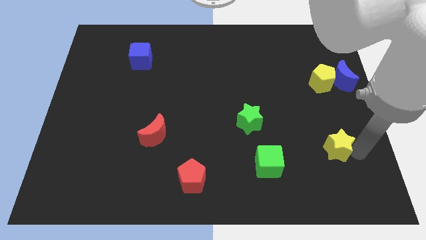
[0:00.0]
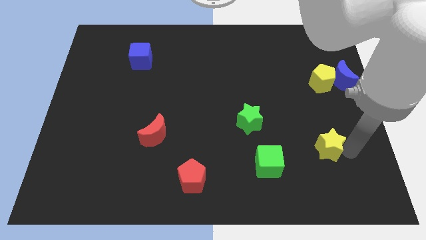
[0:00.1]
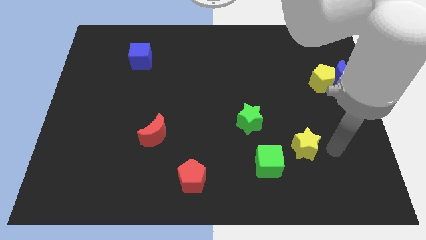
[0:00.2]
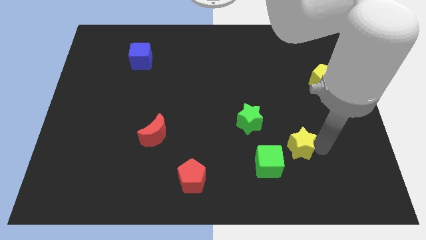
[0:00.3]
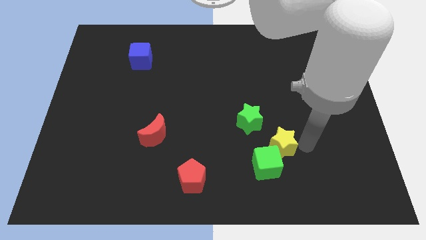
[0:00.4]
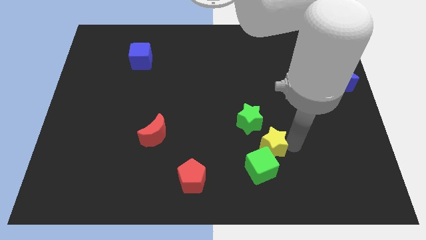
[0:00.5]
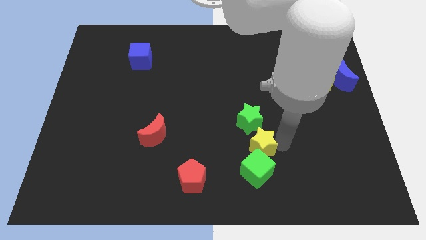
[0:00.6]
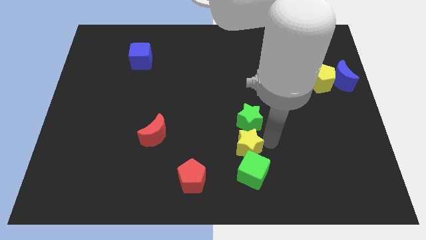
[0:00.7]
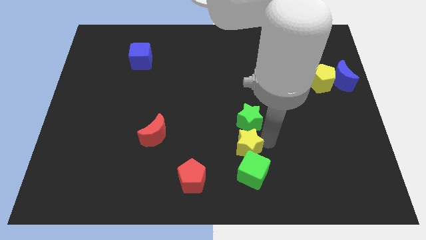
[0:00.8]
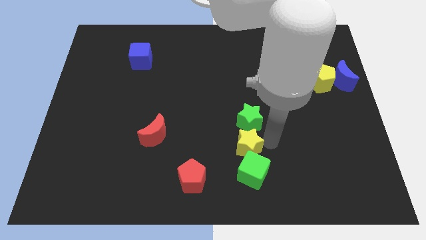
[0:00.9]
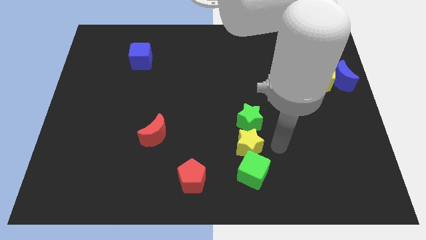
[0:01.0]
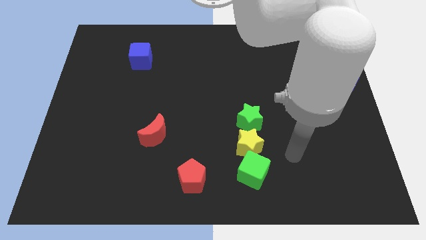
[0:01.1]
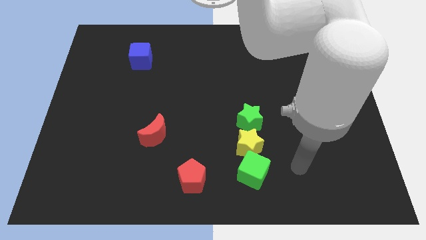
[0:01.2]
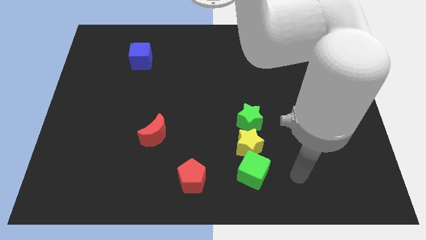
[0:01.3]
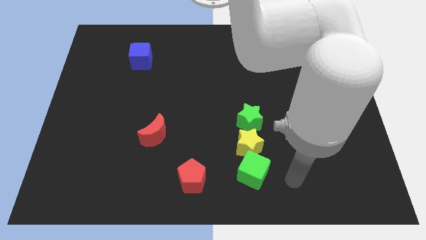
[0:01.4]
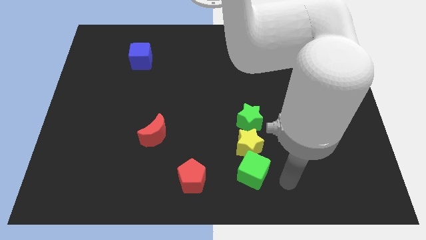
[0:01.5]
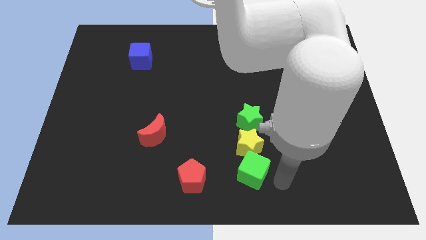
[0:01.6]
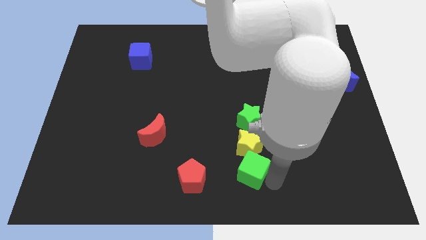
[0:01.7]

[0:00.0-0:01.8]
place the yellow star in between the green star and green cube

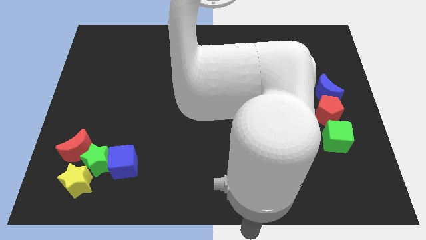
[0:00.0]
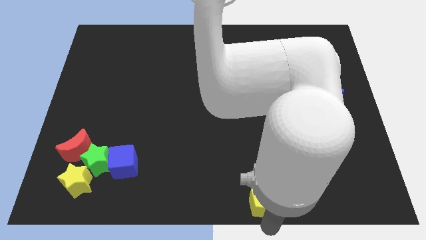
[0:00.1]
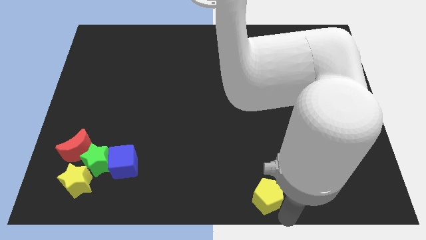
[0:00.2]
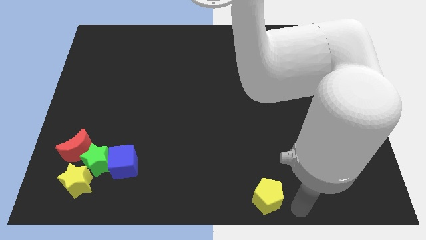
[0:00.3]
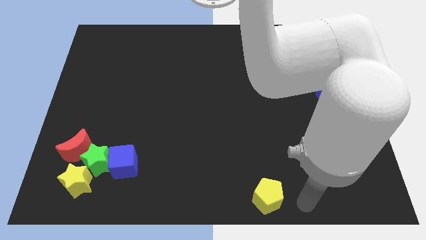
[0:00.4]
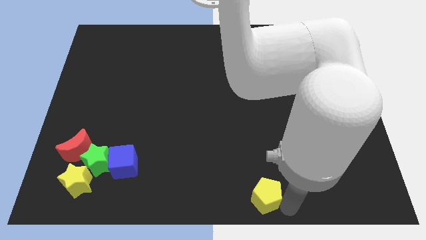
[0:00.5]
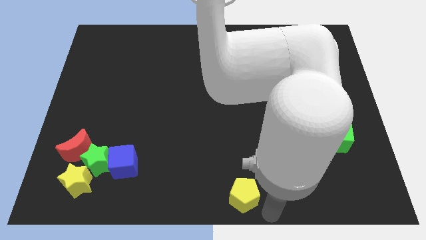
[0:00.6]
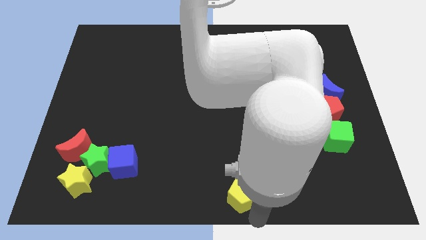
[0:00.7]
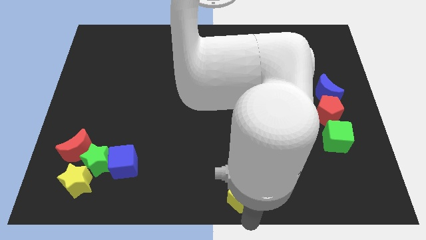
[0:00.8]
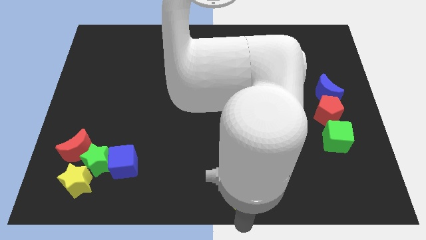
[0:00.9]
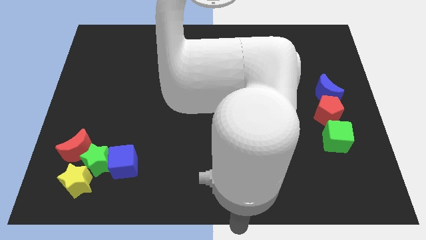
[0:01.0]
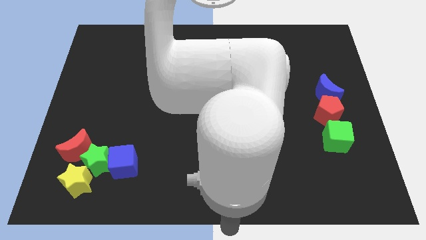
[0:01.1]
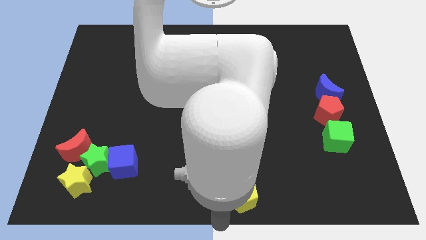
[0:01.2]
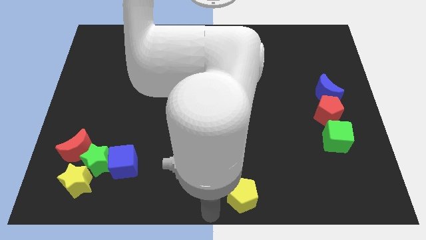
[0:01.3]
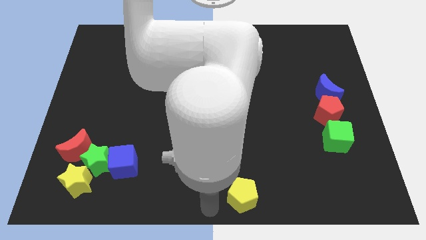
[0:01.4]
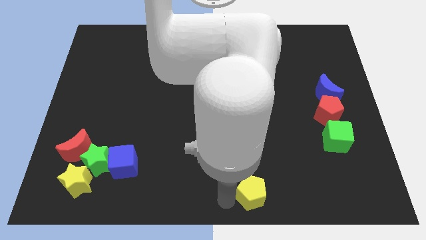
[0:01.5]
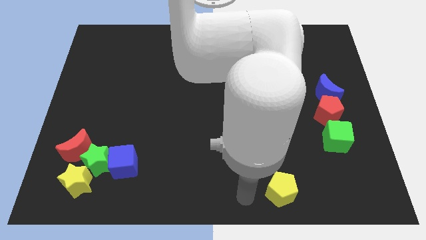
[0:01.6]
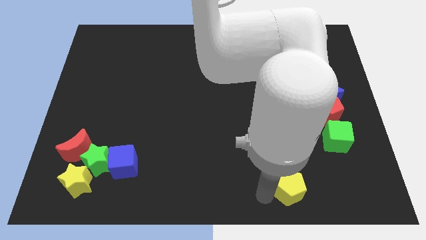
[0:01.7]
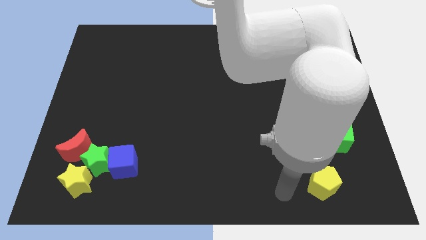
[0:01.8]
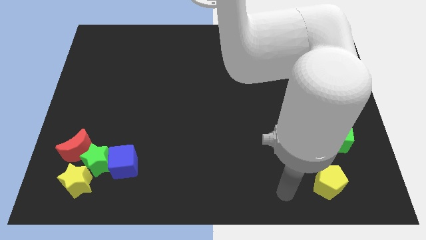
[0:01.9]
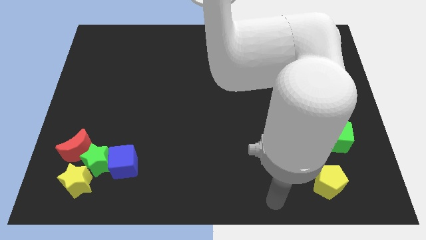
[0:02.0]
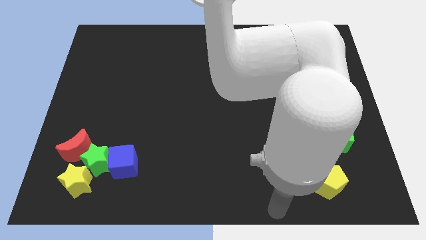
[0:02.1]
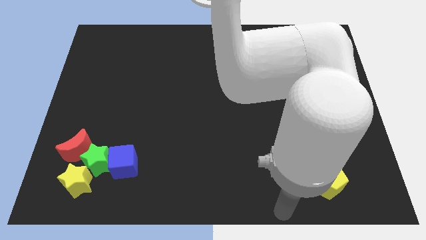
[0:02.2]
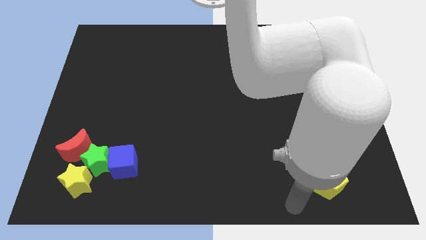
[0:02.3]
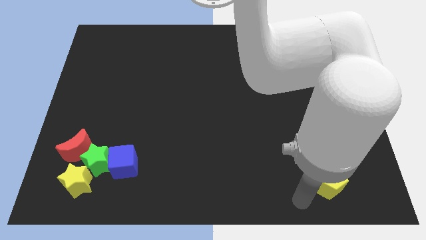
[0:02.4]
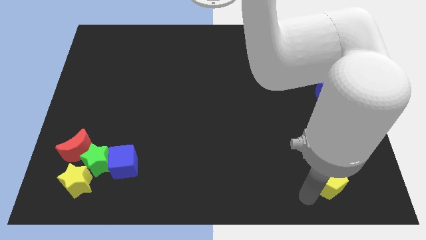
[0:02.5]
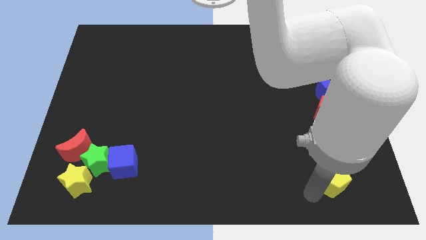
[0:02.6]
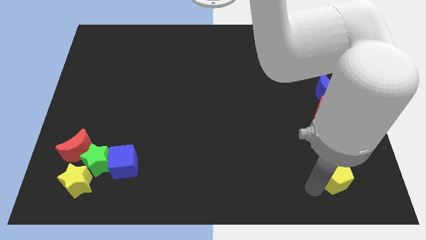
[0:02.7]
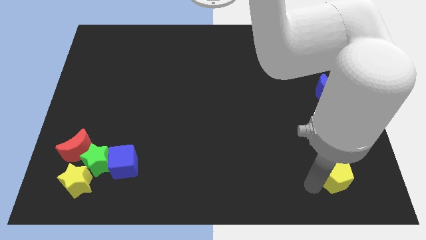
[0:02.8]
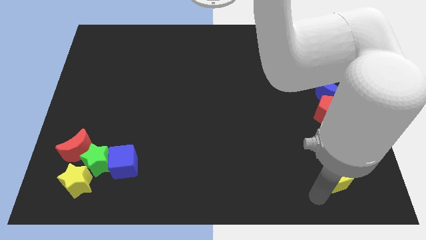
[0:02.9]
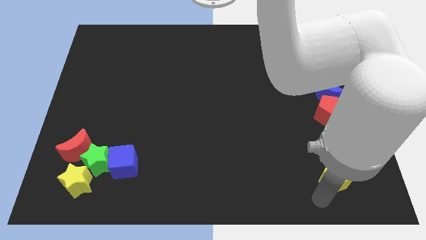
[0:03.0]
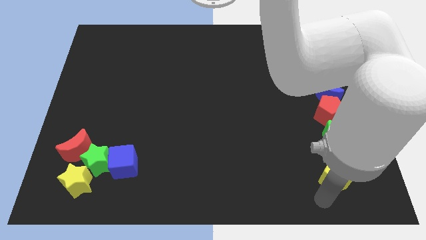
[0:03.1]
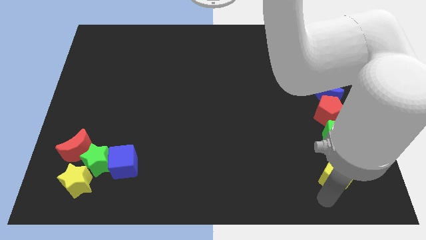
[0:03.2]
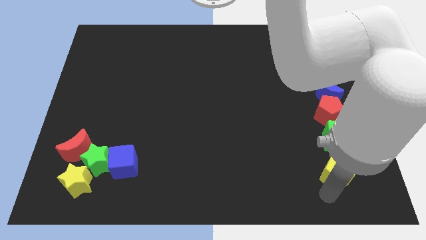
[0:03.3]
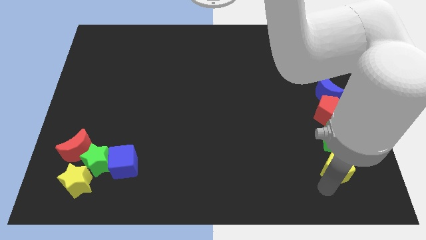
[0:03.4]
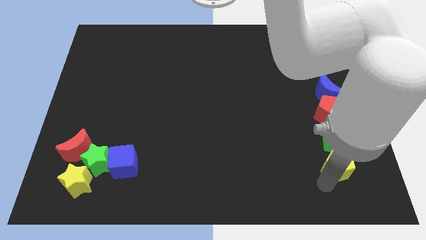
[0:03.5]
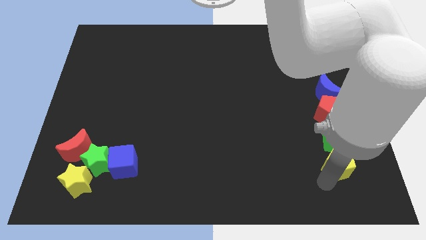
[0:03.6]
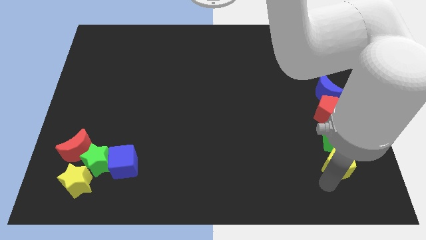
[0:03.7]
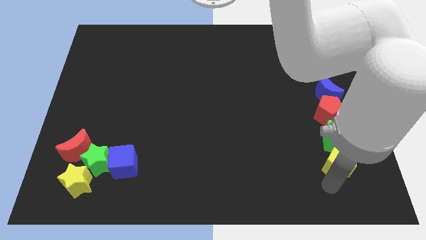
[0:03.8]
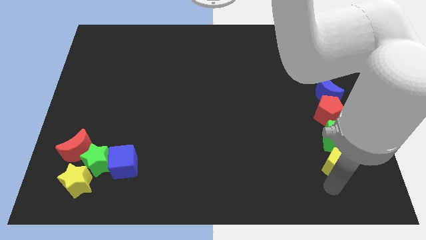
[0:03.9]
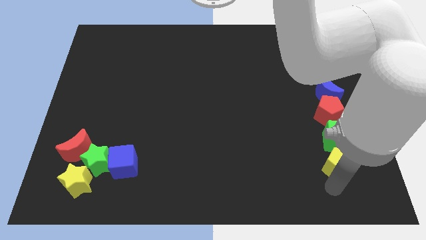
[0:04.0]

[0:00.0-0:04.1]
move yellow pentagon below green cube

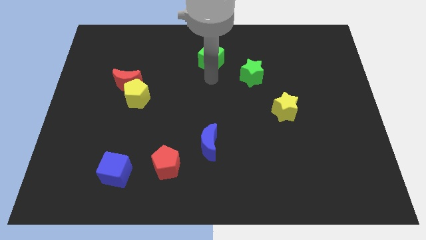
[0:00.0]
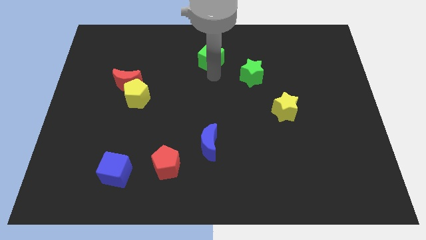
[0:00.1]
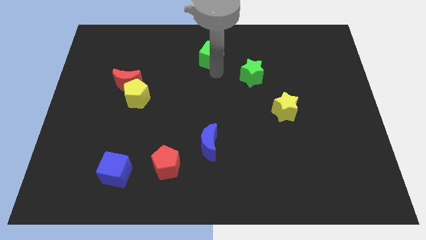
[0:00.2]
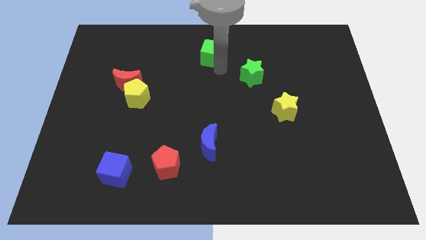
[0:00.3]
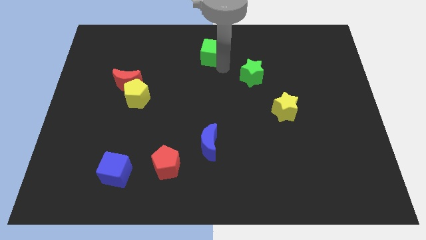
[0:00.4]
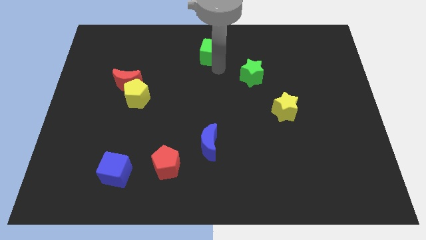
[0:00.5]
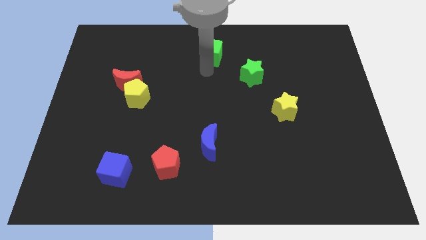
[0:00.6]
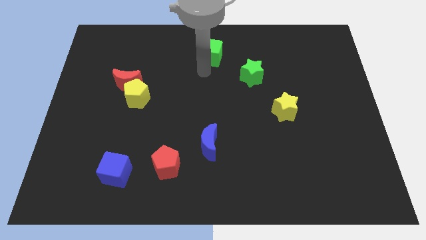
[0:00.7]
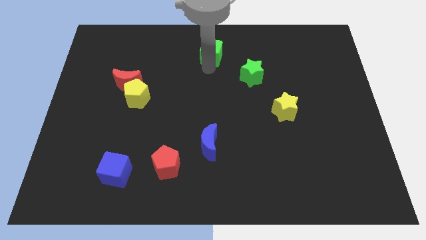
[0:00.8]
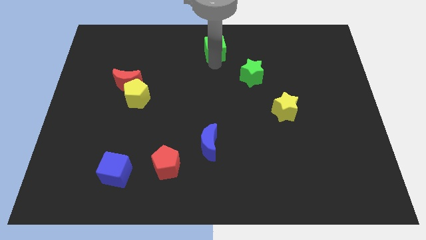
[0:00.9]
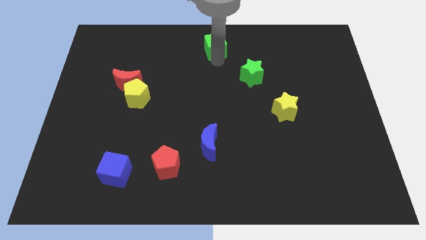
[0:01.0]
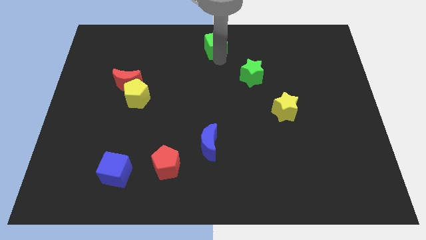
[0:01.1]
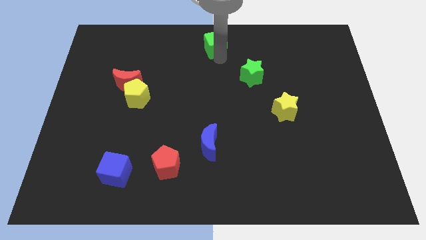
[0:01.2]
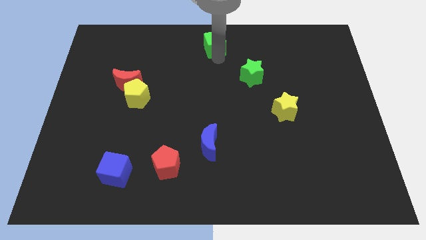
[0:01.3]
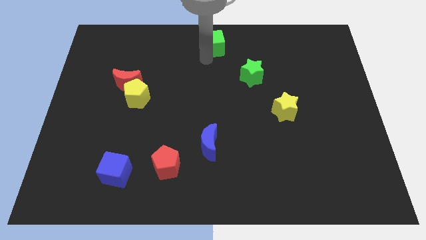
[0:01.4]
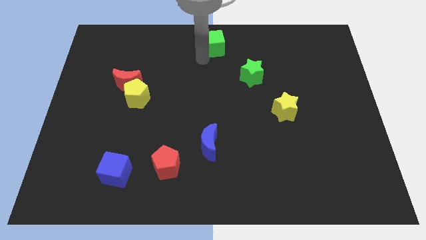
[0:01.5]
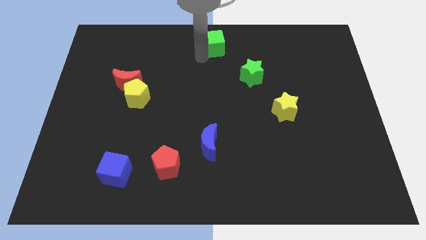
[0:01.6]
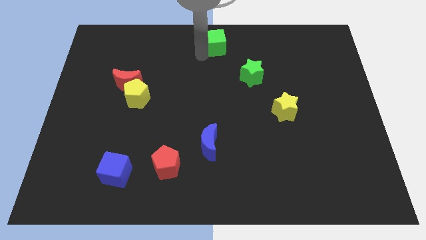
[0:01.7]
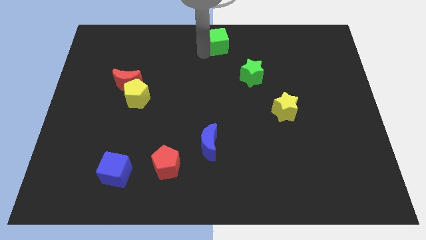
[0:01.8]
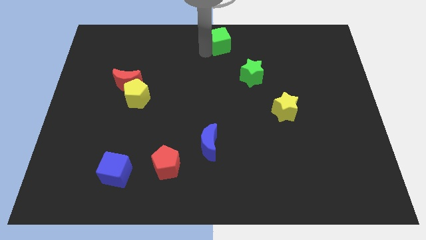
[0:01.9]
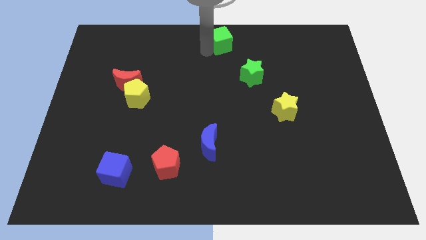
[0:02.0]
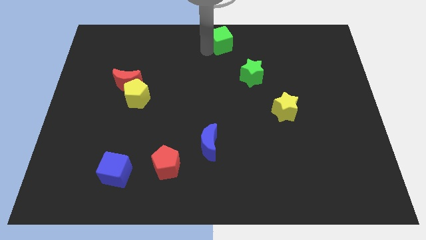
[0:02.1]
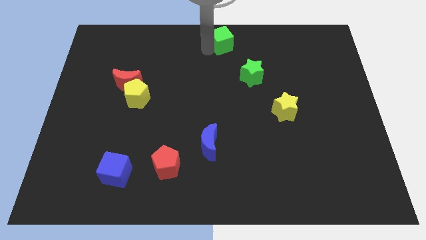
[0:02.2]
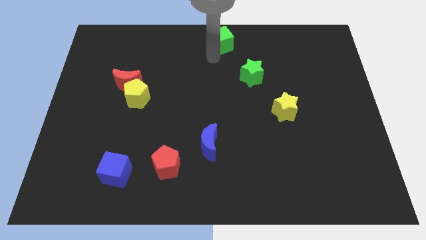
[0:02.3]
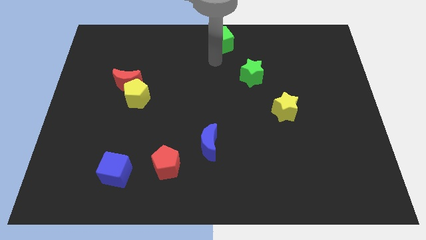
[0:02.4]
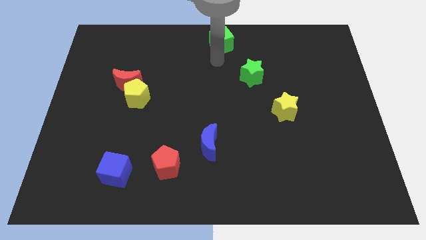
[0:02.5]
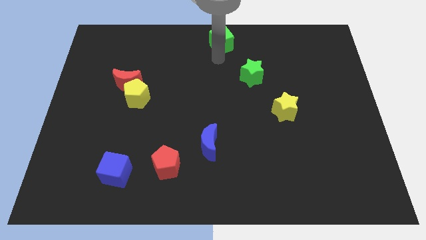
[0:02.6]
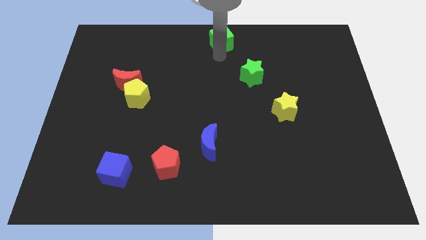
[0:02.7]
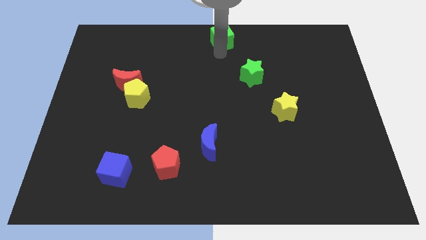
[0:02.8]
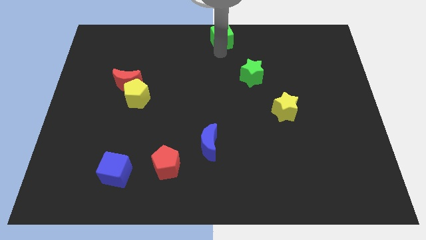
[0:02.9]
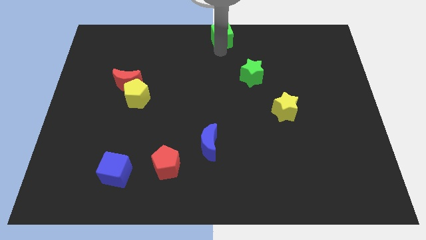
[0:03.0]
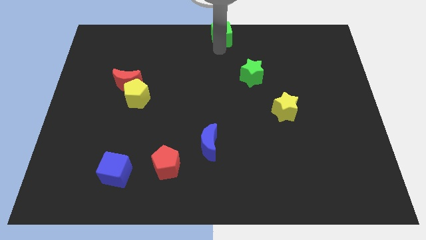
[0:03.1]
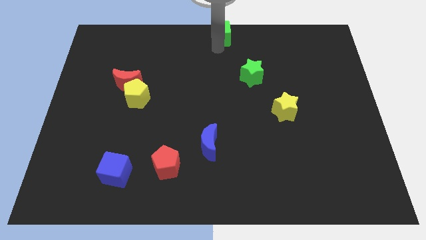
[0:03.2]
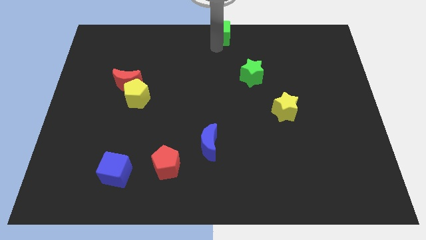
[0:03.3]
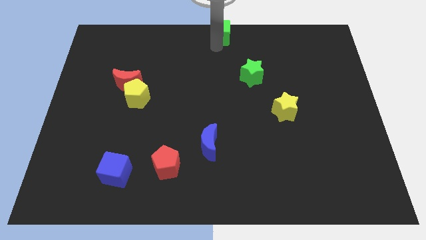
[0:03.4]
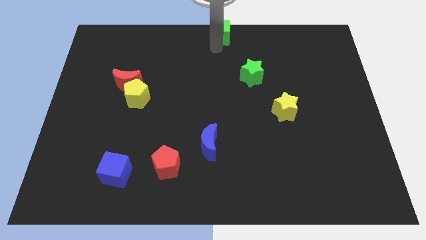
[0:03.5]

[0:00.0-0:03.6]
put the green cube diagonally top left to the green star
